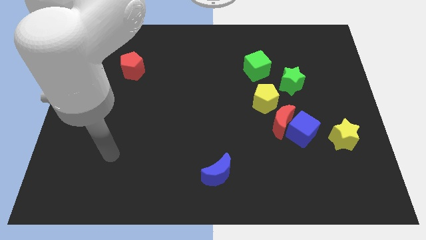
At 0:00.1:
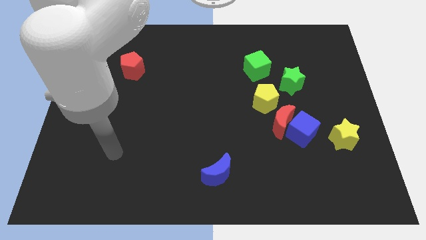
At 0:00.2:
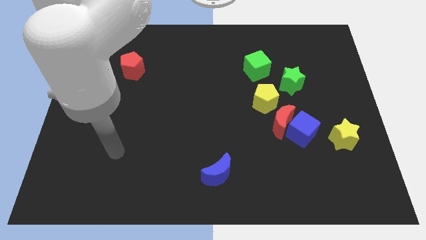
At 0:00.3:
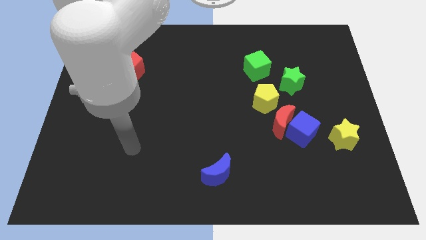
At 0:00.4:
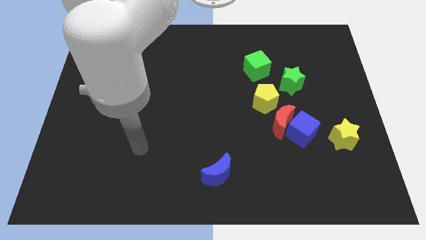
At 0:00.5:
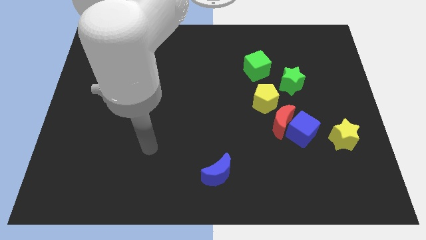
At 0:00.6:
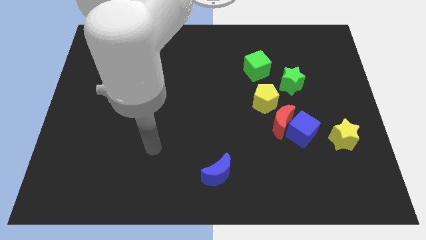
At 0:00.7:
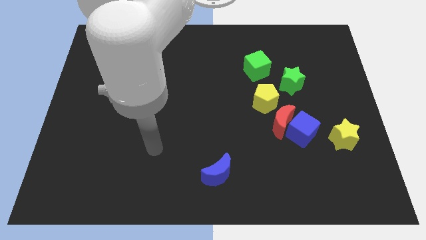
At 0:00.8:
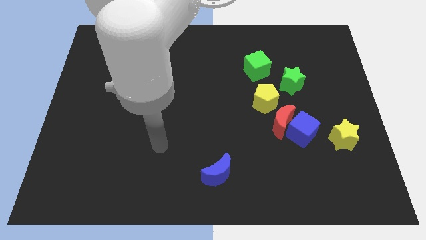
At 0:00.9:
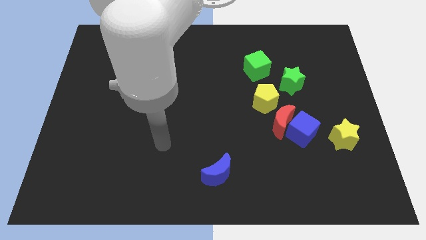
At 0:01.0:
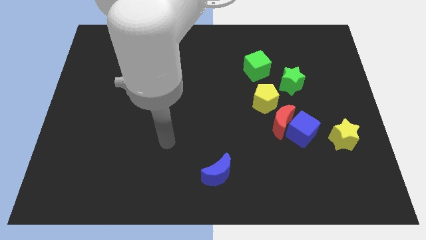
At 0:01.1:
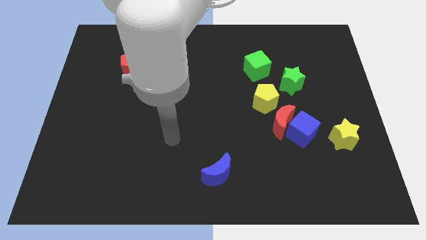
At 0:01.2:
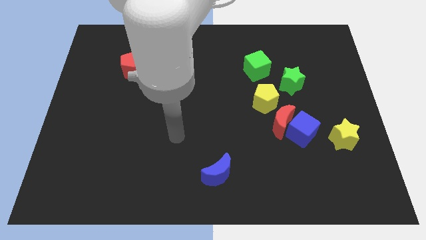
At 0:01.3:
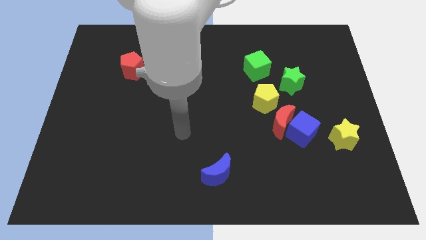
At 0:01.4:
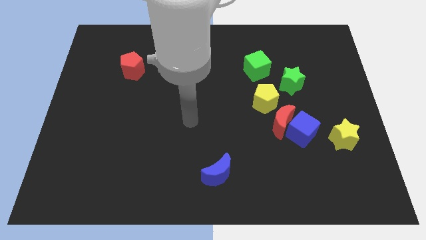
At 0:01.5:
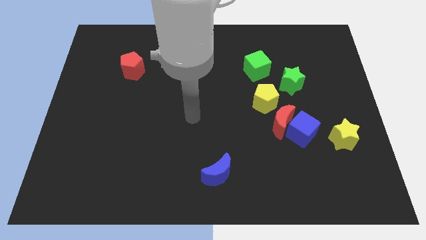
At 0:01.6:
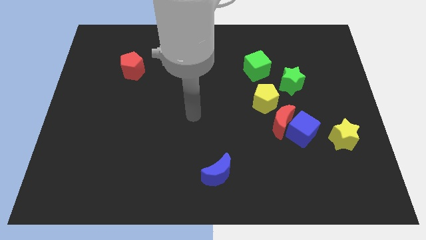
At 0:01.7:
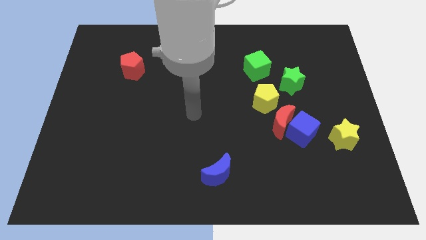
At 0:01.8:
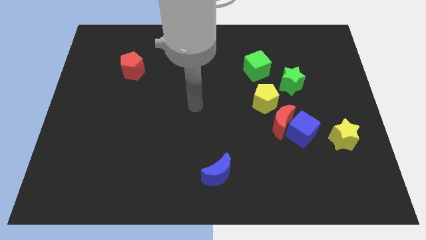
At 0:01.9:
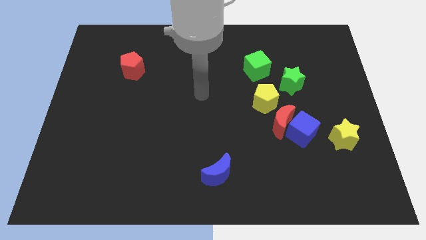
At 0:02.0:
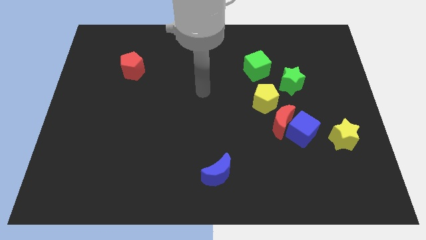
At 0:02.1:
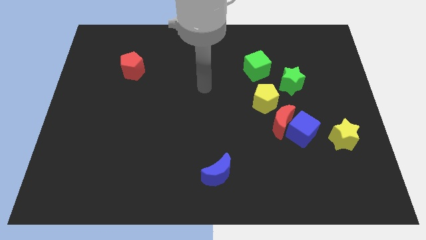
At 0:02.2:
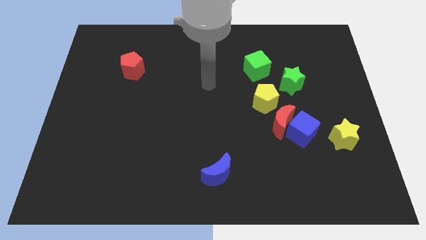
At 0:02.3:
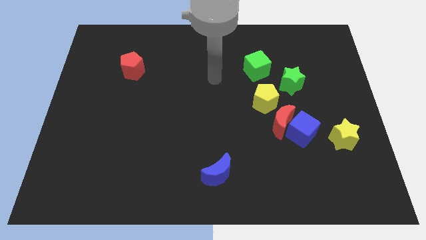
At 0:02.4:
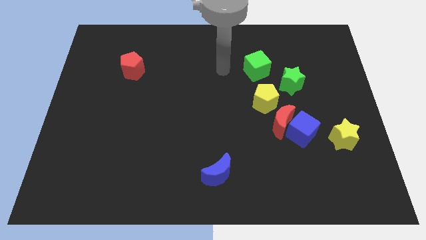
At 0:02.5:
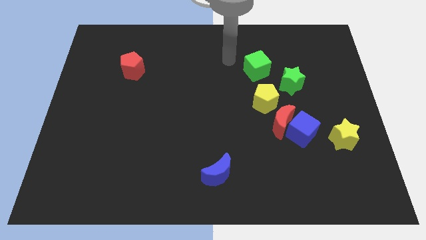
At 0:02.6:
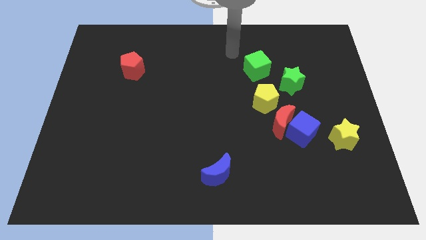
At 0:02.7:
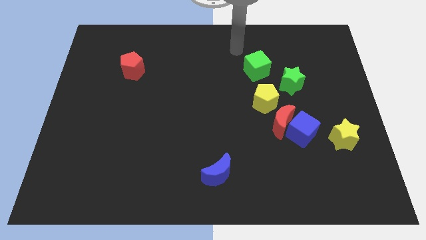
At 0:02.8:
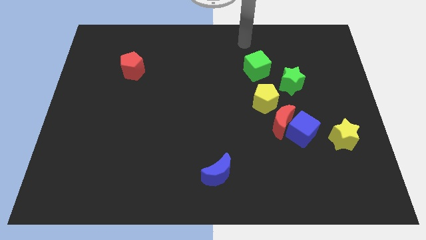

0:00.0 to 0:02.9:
move the arm to the top middle

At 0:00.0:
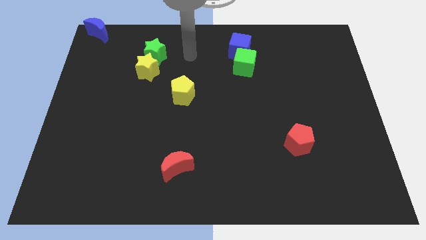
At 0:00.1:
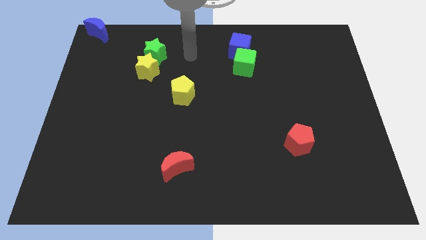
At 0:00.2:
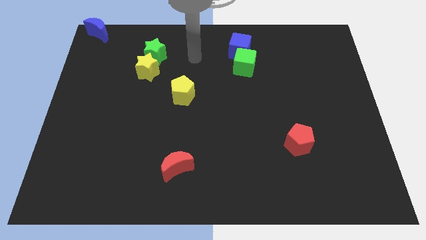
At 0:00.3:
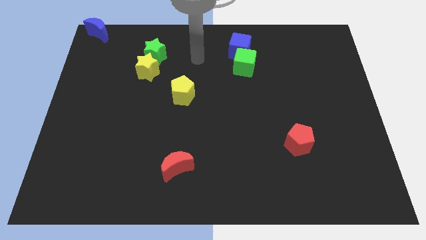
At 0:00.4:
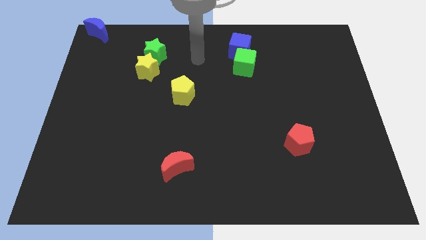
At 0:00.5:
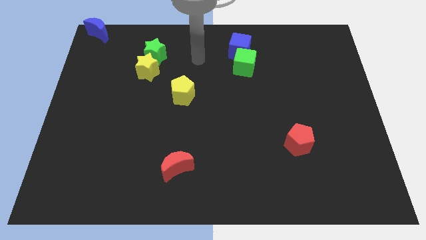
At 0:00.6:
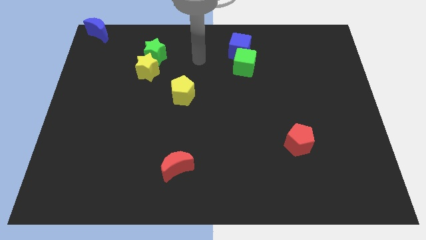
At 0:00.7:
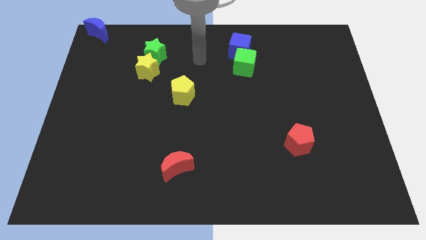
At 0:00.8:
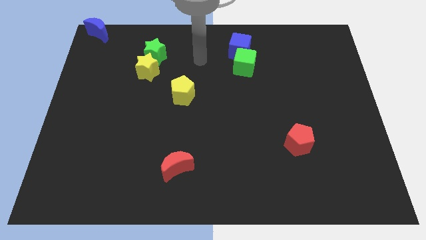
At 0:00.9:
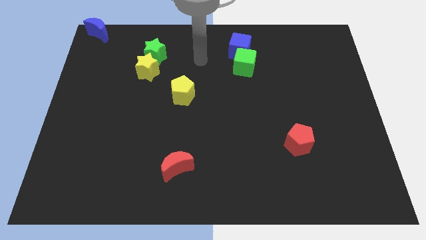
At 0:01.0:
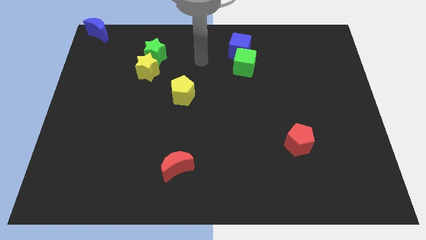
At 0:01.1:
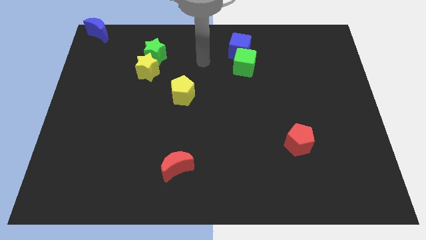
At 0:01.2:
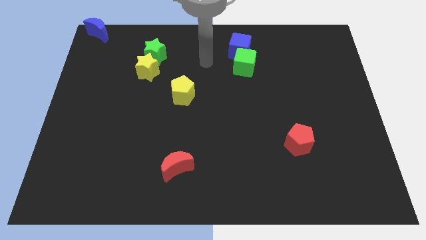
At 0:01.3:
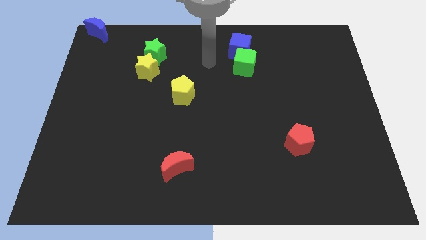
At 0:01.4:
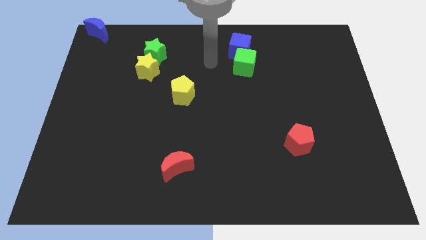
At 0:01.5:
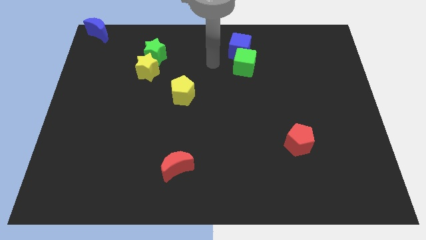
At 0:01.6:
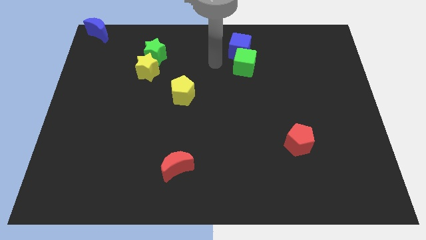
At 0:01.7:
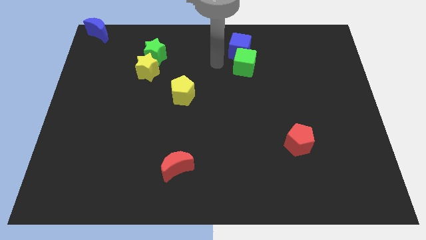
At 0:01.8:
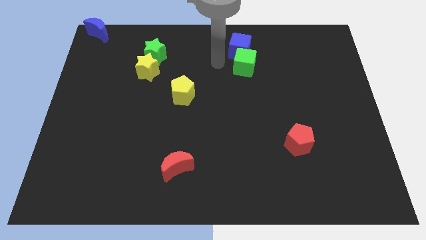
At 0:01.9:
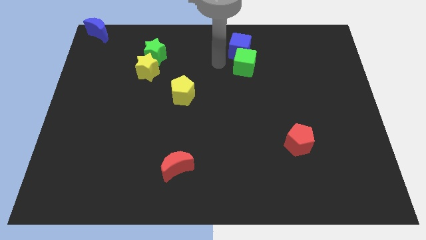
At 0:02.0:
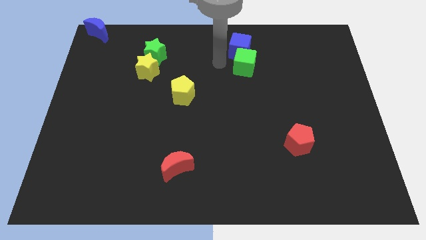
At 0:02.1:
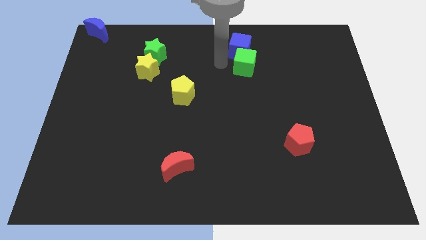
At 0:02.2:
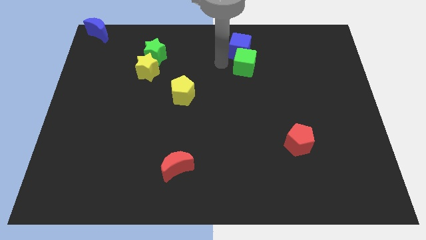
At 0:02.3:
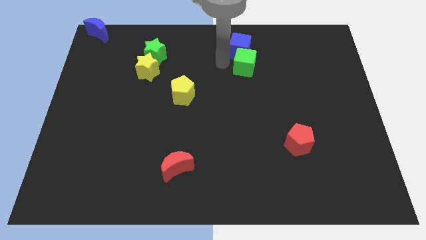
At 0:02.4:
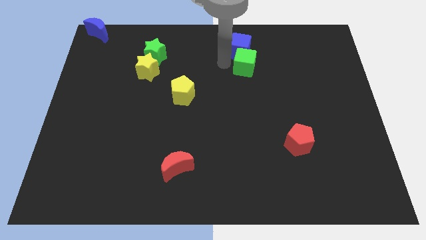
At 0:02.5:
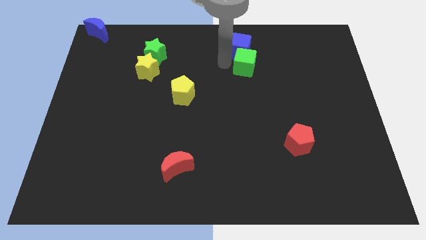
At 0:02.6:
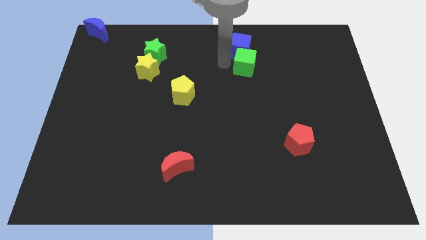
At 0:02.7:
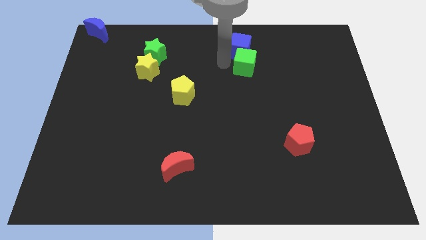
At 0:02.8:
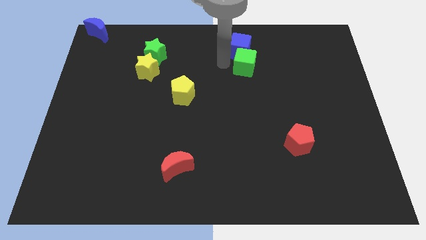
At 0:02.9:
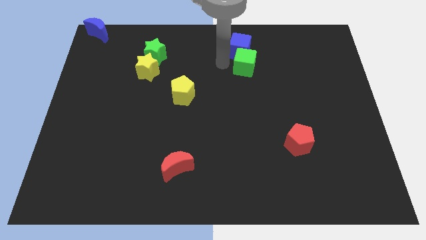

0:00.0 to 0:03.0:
move the arm close to the green cube

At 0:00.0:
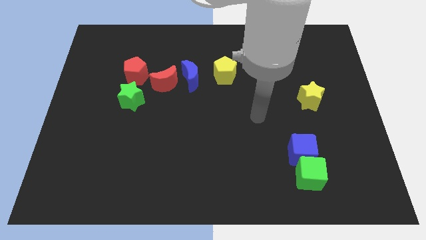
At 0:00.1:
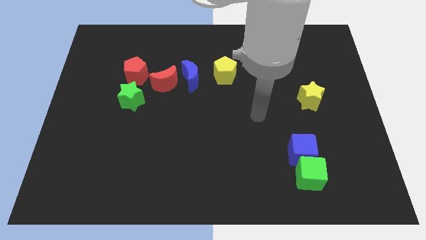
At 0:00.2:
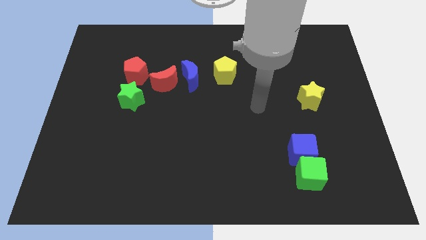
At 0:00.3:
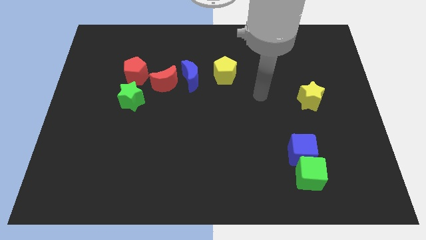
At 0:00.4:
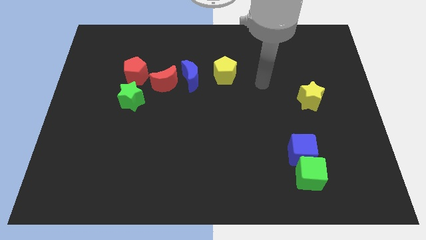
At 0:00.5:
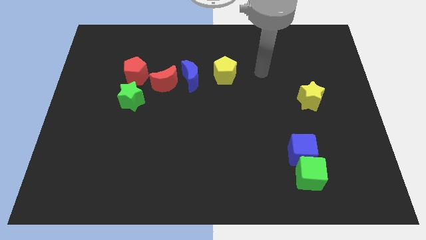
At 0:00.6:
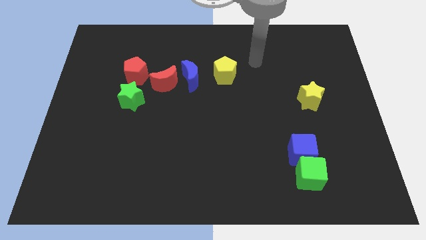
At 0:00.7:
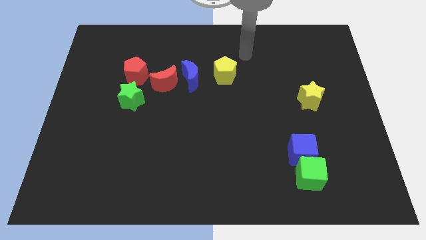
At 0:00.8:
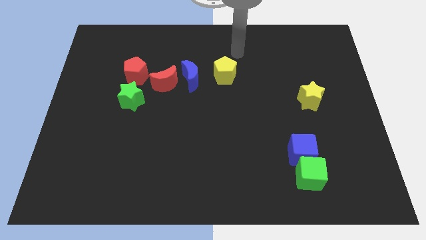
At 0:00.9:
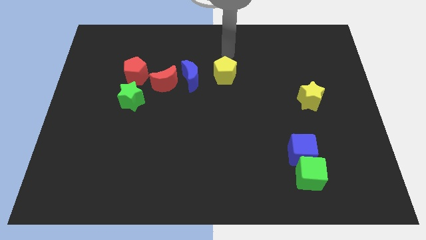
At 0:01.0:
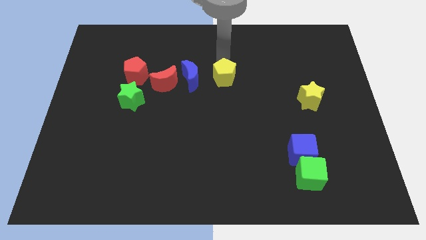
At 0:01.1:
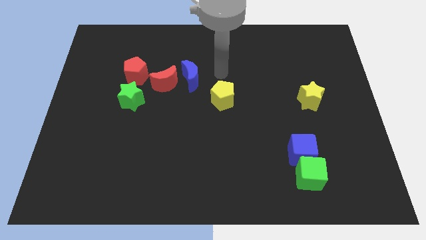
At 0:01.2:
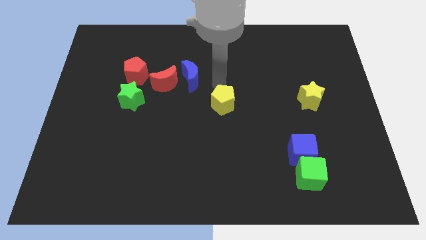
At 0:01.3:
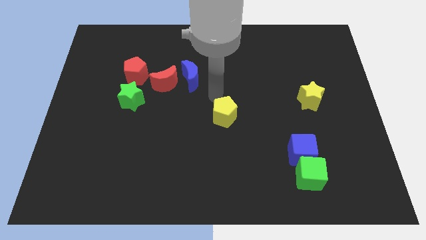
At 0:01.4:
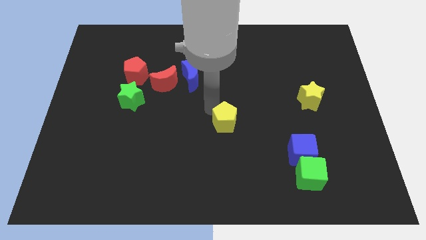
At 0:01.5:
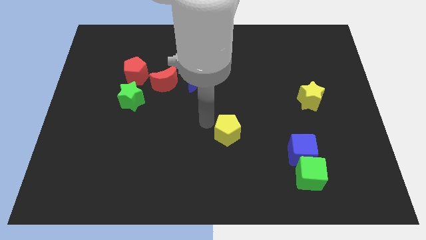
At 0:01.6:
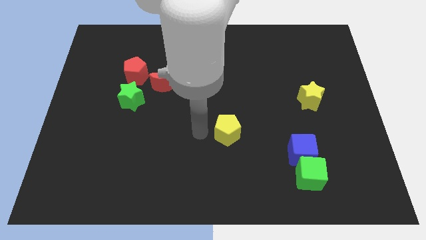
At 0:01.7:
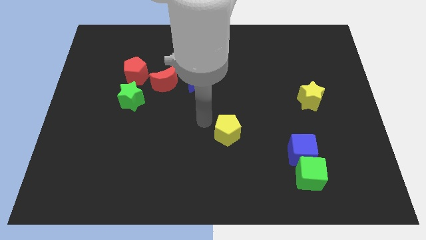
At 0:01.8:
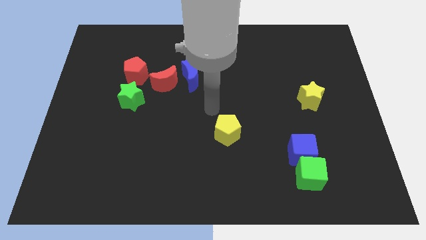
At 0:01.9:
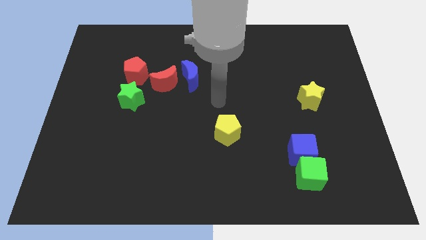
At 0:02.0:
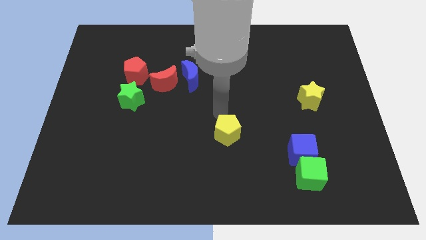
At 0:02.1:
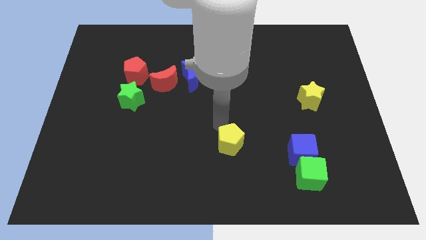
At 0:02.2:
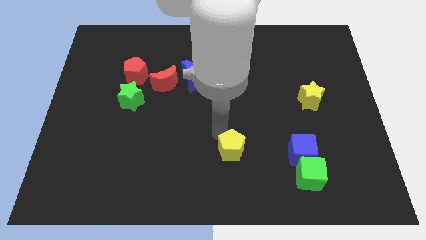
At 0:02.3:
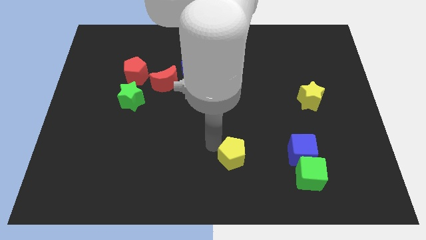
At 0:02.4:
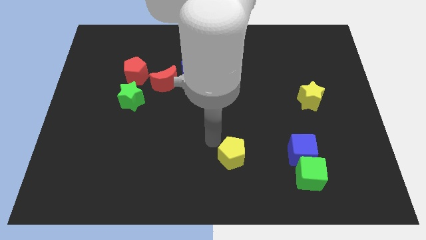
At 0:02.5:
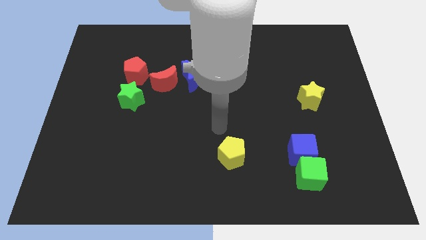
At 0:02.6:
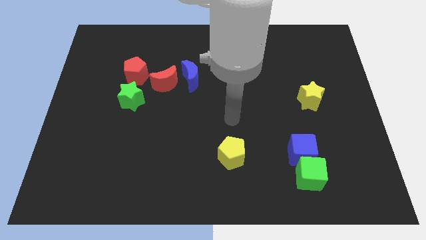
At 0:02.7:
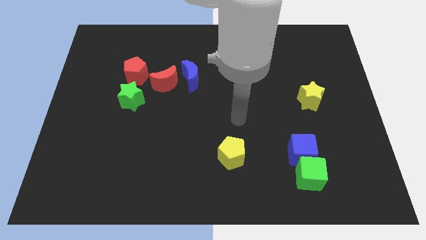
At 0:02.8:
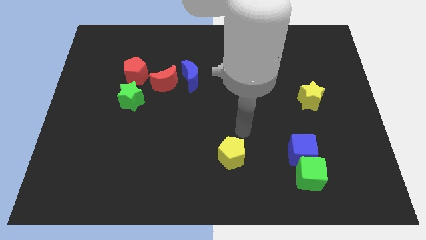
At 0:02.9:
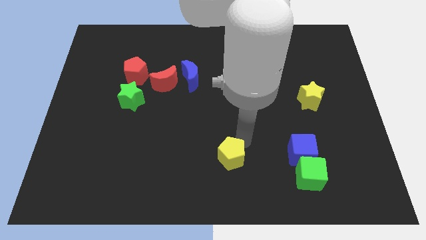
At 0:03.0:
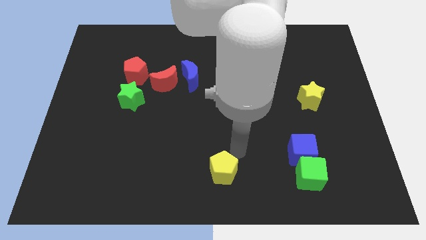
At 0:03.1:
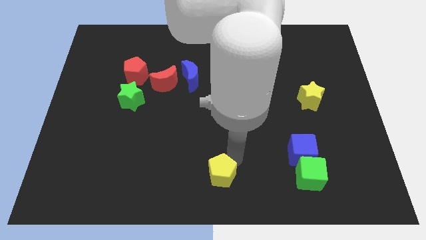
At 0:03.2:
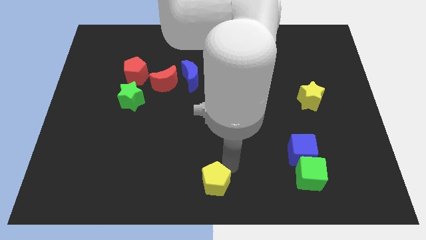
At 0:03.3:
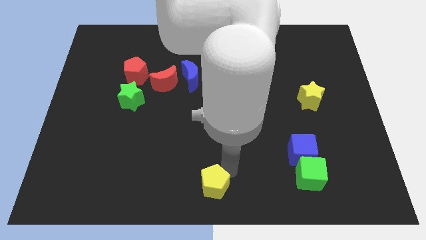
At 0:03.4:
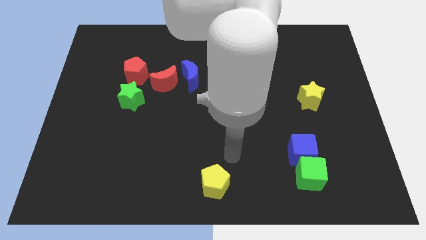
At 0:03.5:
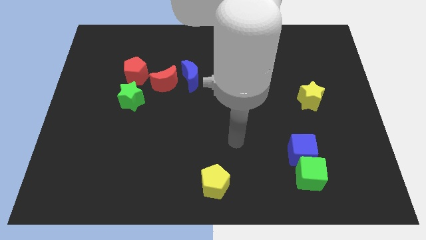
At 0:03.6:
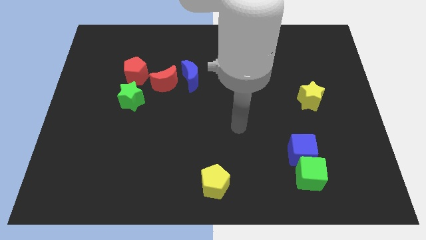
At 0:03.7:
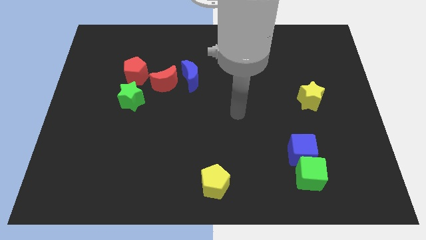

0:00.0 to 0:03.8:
move the yellow pentagon to the bottom center of the board
